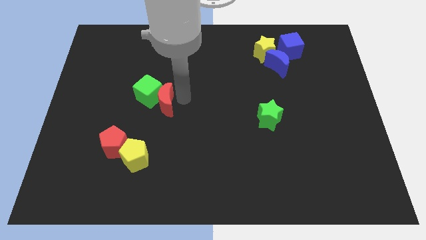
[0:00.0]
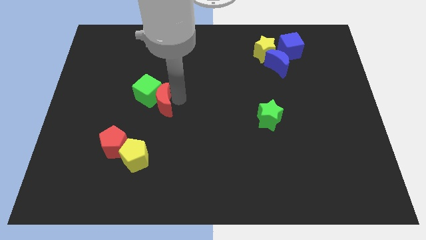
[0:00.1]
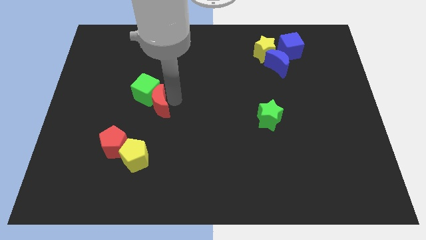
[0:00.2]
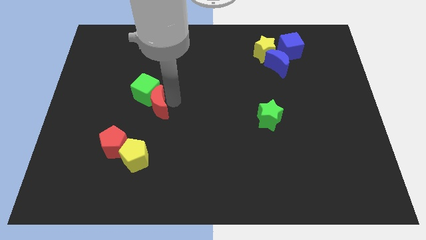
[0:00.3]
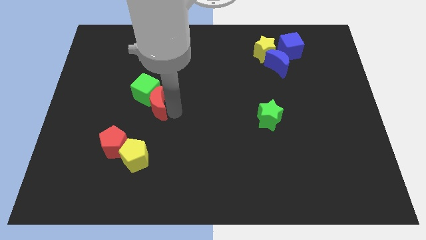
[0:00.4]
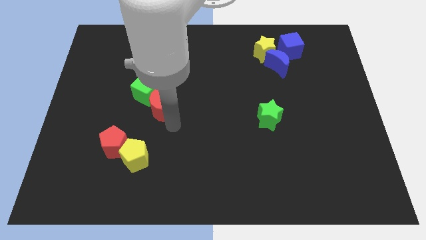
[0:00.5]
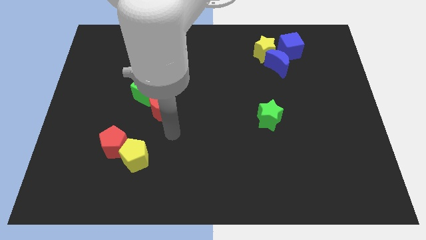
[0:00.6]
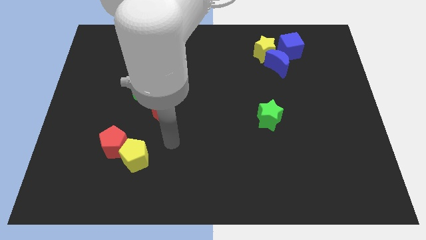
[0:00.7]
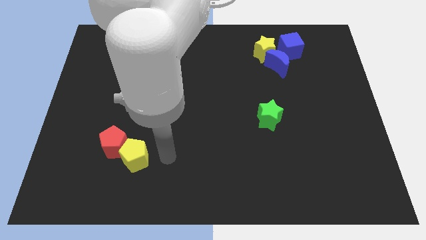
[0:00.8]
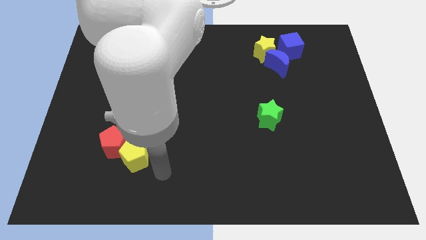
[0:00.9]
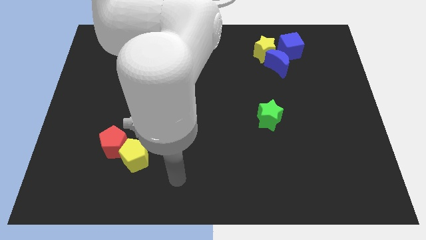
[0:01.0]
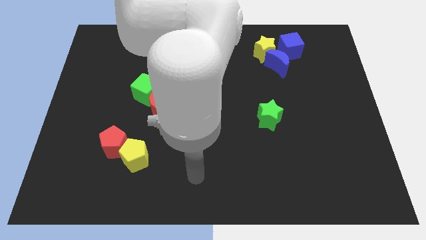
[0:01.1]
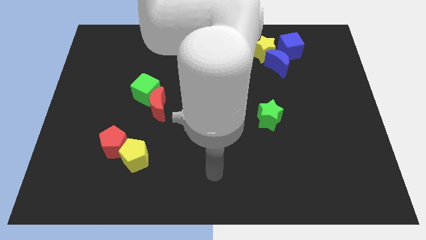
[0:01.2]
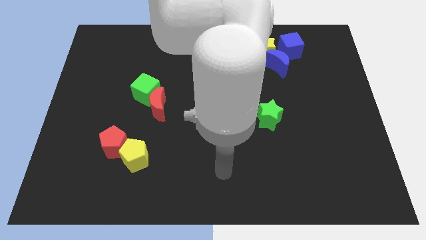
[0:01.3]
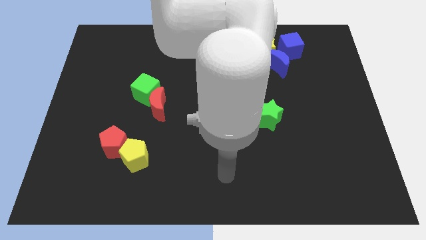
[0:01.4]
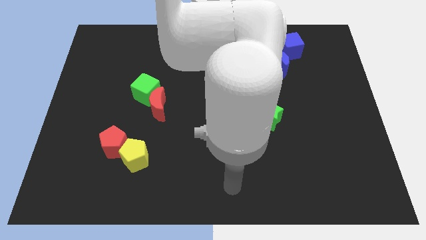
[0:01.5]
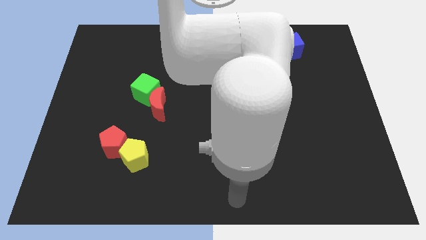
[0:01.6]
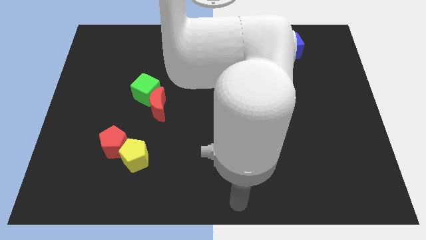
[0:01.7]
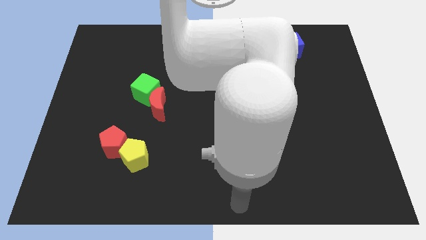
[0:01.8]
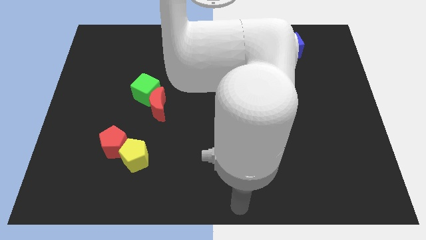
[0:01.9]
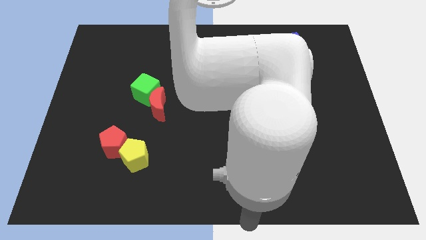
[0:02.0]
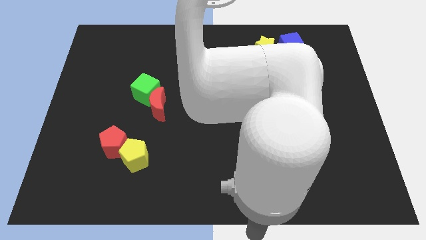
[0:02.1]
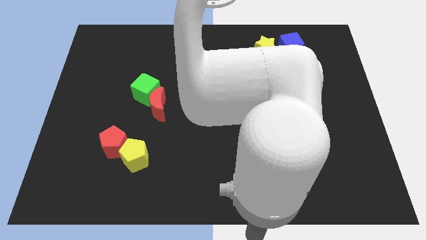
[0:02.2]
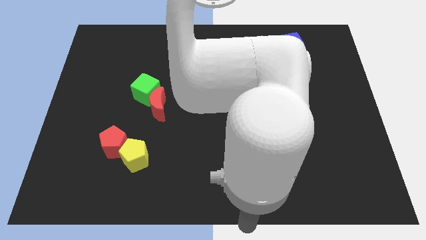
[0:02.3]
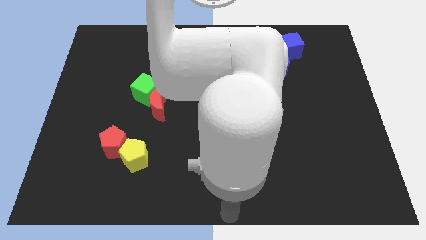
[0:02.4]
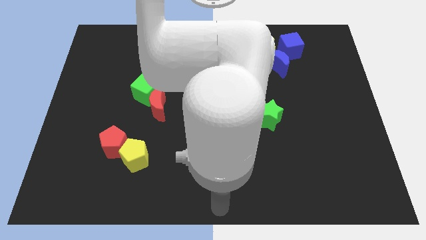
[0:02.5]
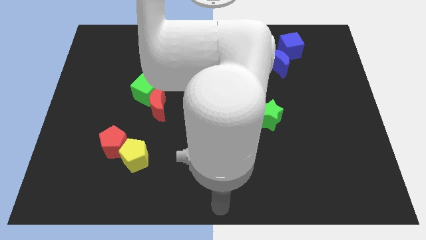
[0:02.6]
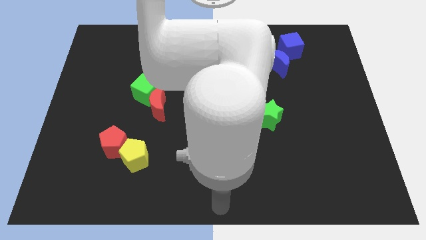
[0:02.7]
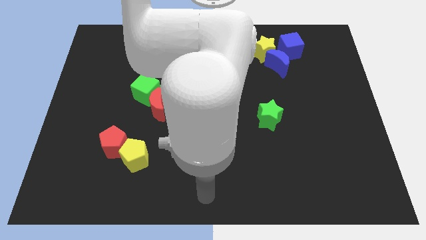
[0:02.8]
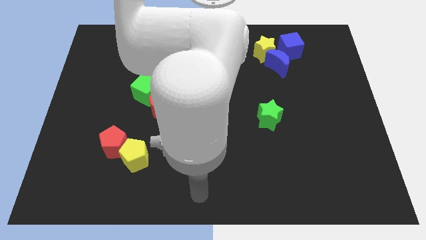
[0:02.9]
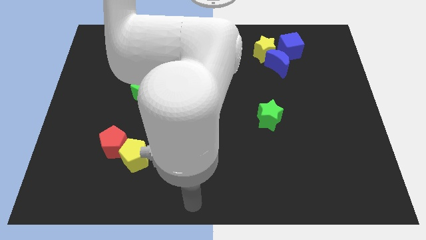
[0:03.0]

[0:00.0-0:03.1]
move your arm towards bottom middle of the board

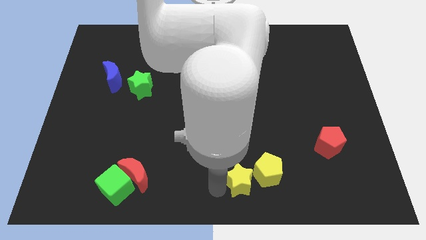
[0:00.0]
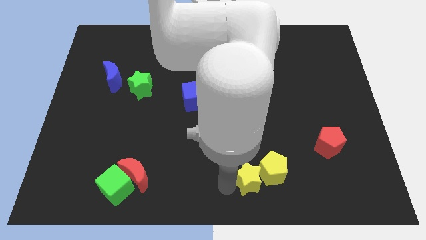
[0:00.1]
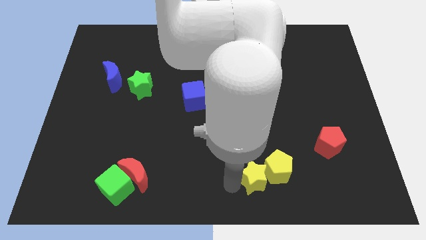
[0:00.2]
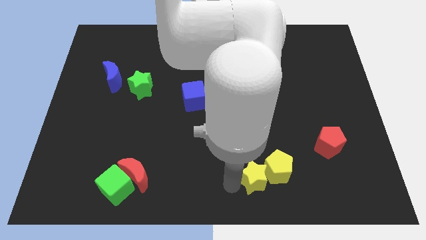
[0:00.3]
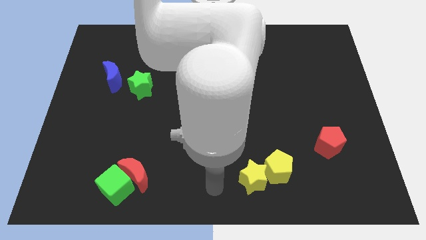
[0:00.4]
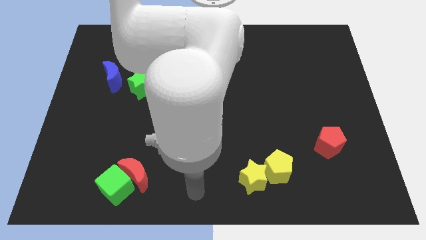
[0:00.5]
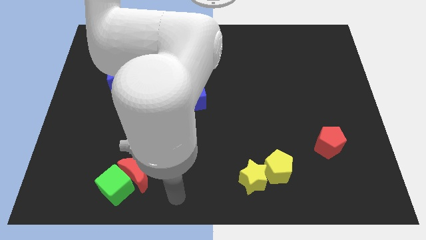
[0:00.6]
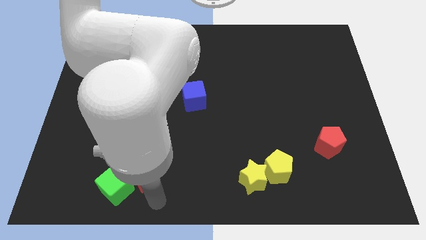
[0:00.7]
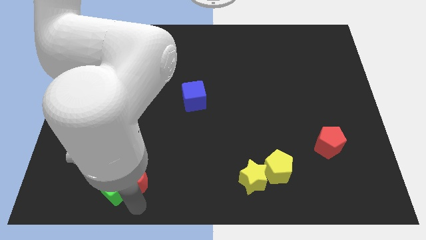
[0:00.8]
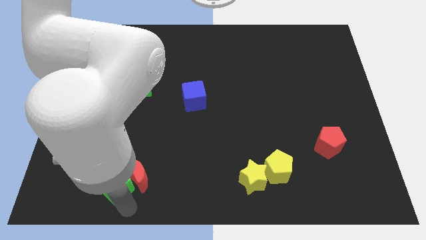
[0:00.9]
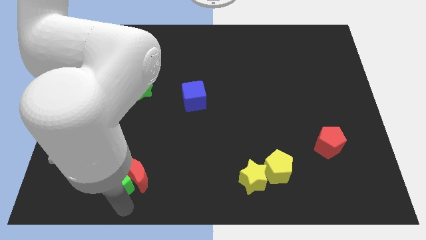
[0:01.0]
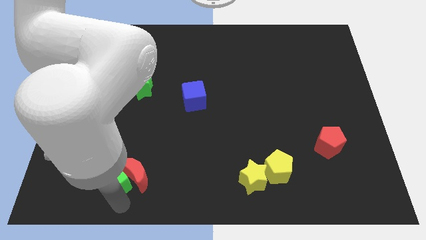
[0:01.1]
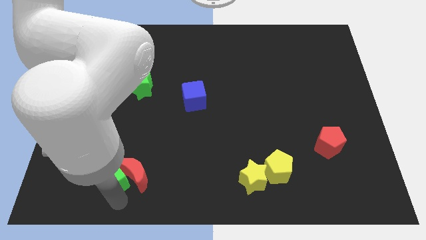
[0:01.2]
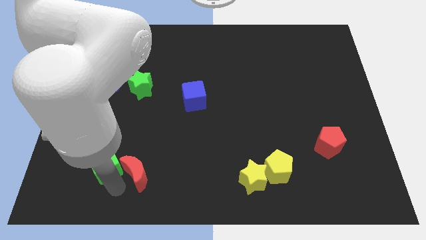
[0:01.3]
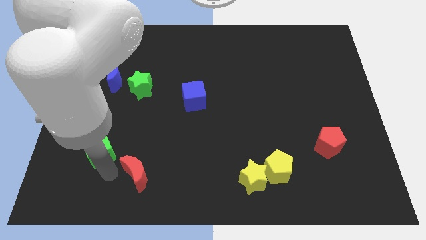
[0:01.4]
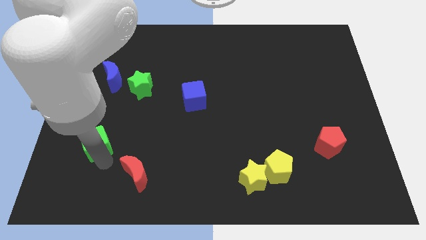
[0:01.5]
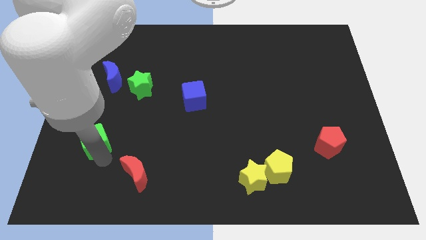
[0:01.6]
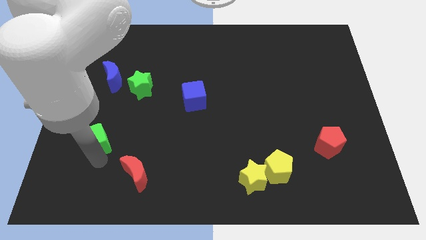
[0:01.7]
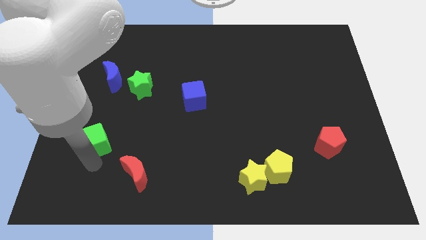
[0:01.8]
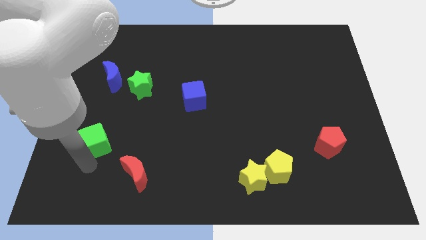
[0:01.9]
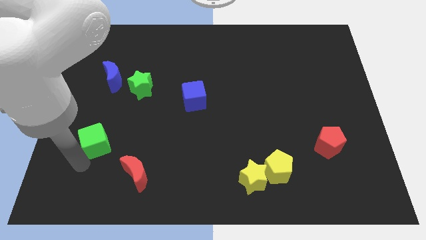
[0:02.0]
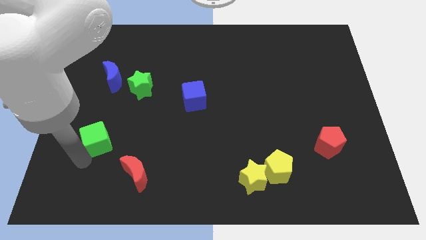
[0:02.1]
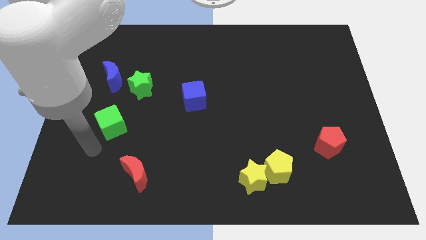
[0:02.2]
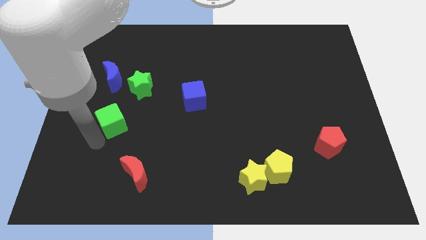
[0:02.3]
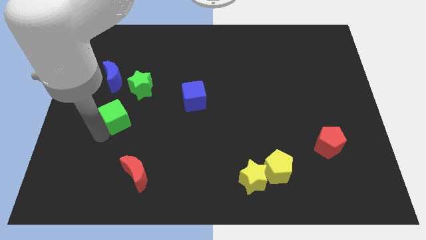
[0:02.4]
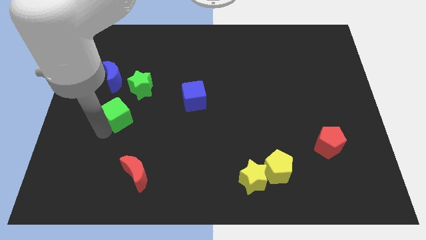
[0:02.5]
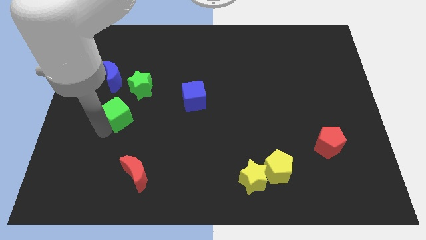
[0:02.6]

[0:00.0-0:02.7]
push green cube below blue crescent

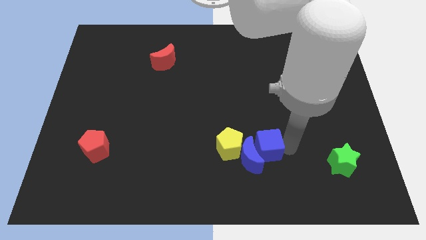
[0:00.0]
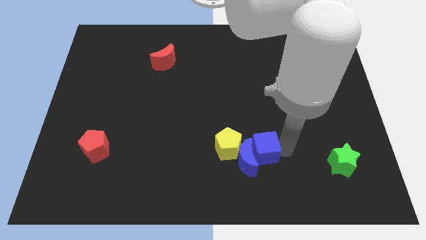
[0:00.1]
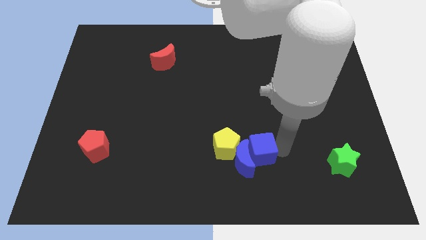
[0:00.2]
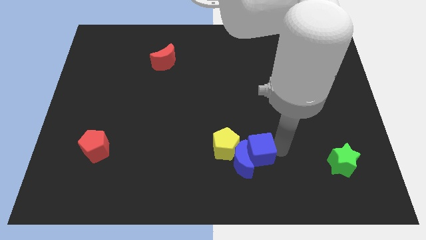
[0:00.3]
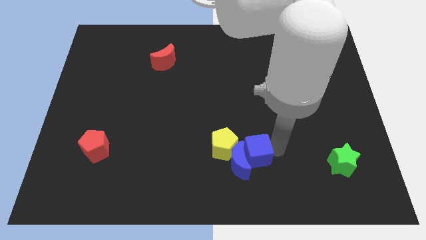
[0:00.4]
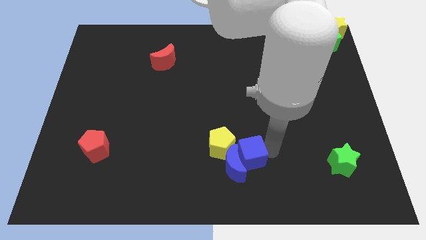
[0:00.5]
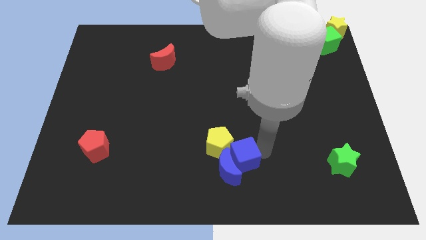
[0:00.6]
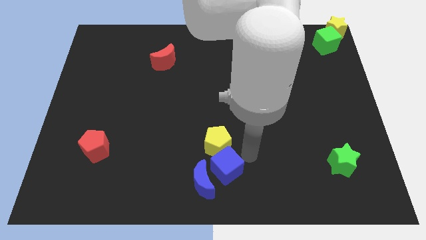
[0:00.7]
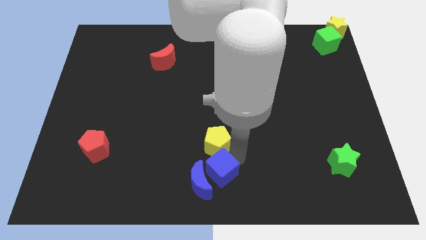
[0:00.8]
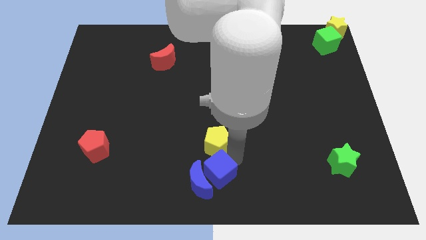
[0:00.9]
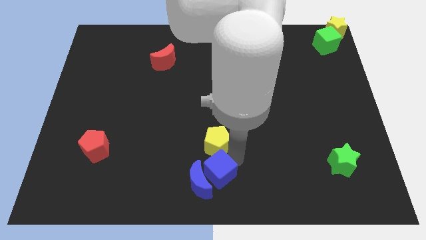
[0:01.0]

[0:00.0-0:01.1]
push the blue cube to the bottom of the yellow pentagon

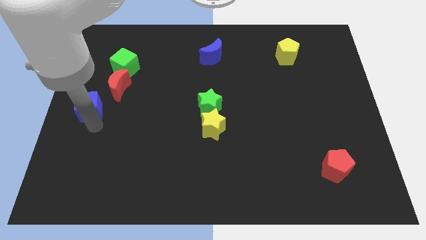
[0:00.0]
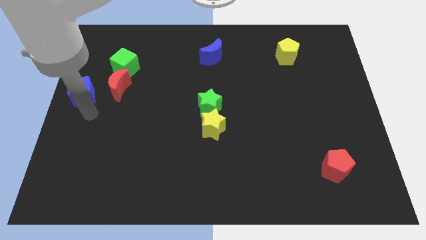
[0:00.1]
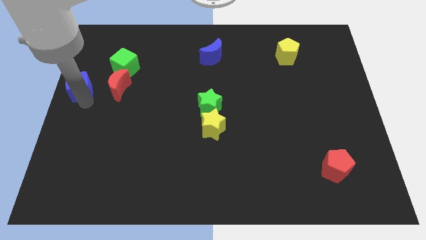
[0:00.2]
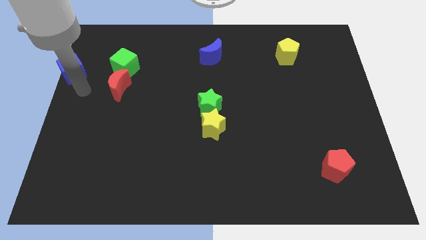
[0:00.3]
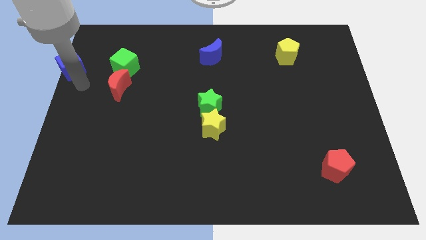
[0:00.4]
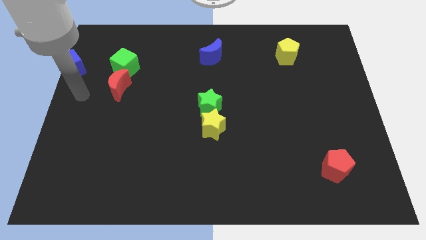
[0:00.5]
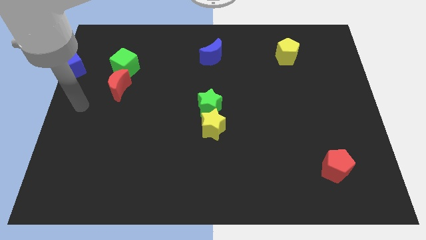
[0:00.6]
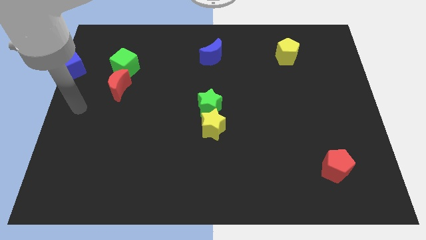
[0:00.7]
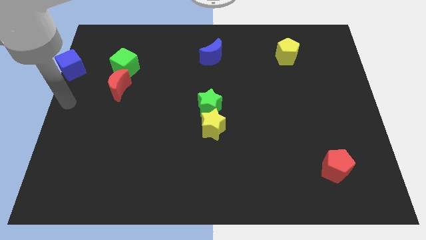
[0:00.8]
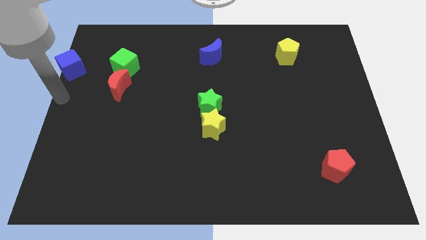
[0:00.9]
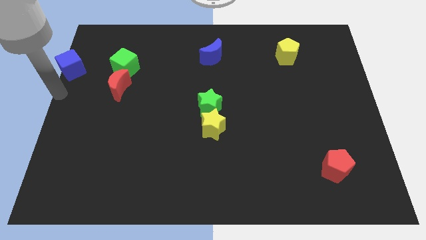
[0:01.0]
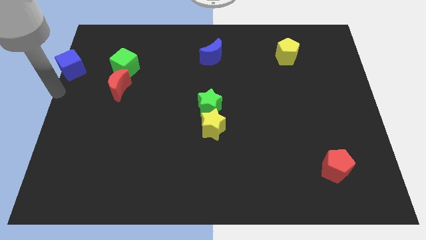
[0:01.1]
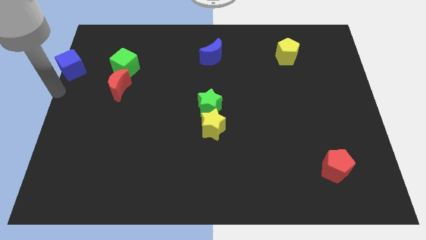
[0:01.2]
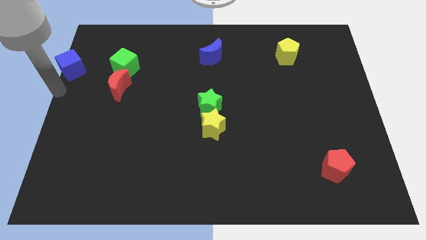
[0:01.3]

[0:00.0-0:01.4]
push blue cube beside green cube

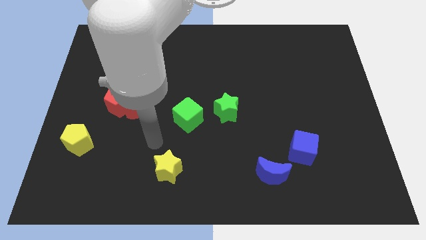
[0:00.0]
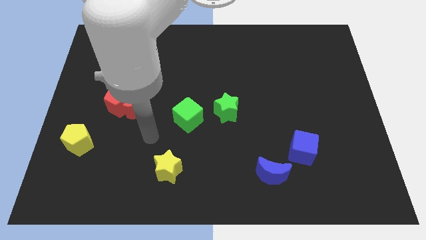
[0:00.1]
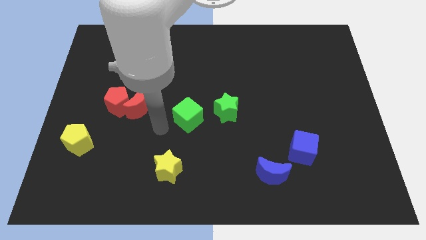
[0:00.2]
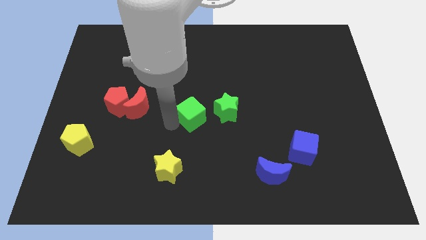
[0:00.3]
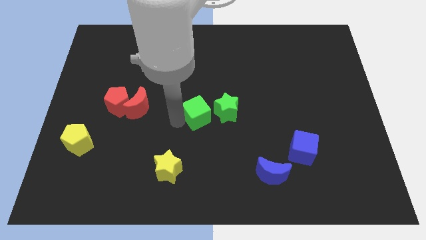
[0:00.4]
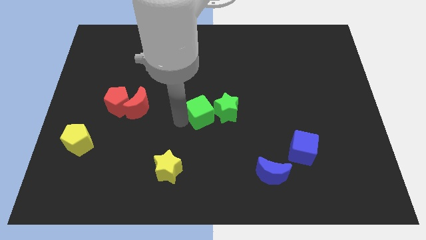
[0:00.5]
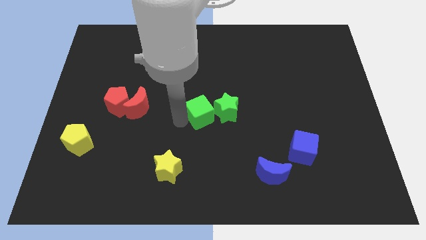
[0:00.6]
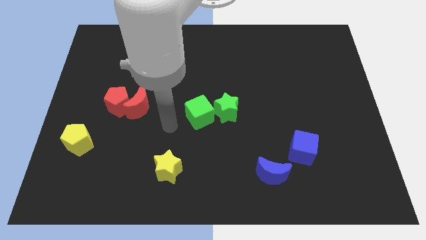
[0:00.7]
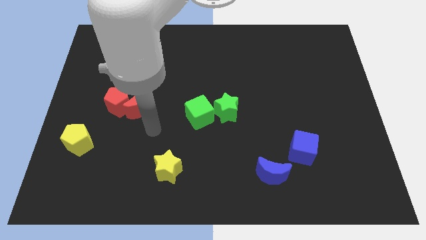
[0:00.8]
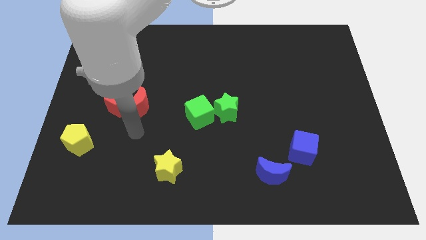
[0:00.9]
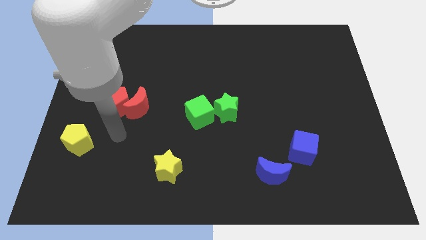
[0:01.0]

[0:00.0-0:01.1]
push the green cube towards the green star
